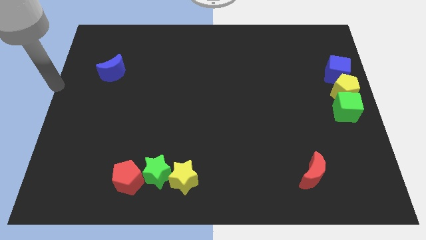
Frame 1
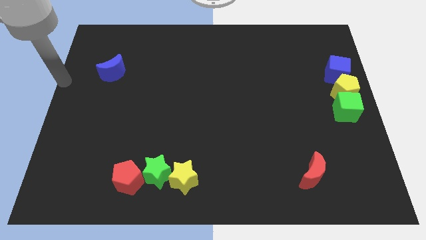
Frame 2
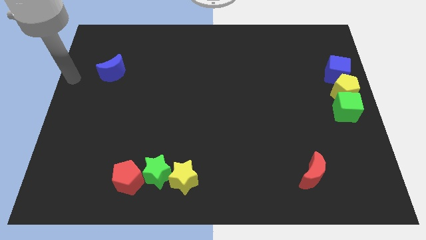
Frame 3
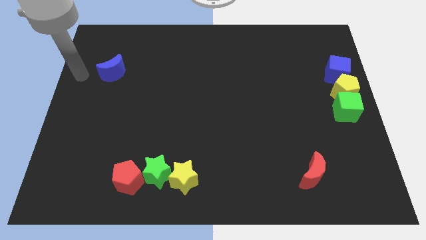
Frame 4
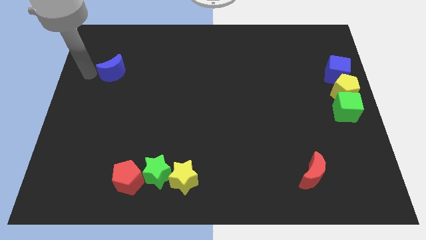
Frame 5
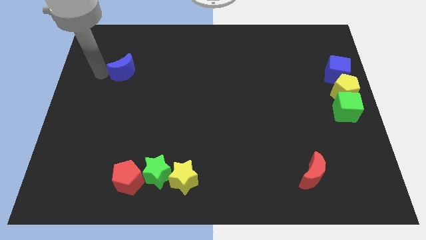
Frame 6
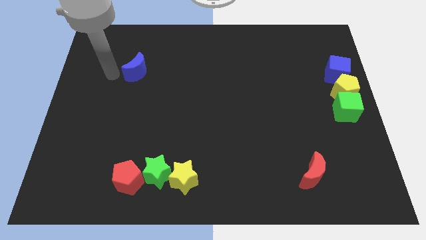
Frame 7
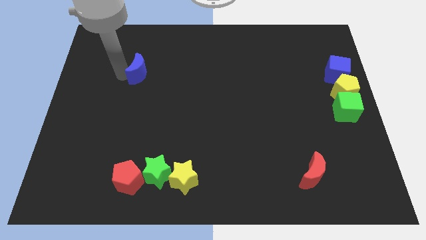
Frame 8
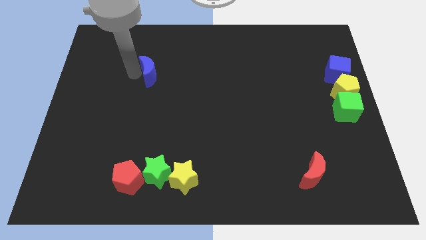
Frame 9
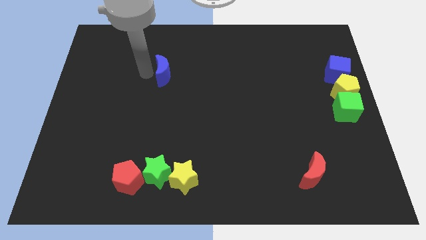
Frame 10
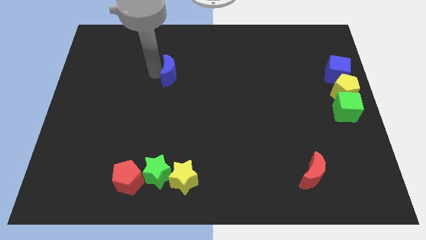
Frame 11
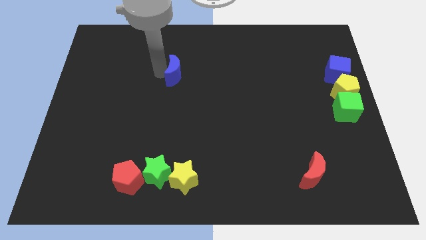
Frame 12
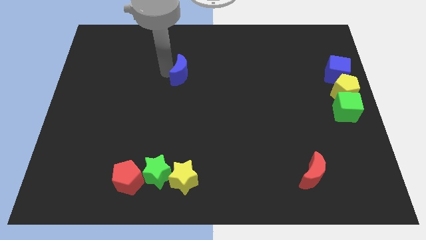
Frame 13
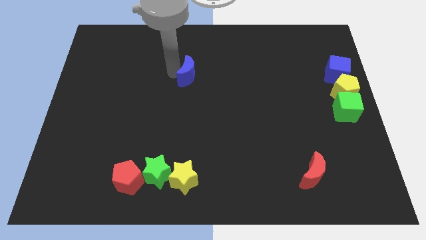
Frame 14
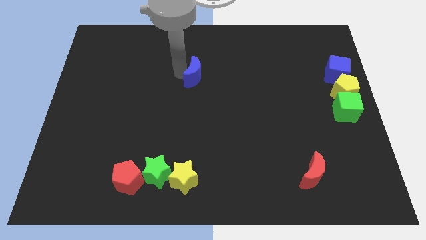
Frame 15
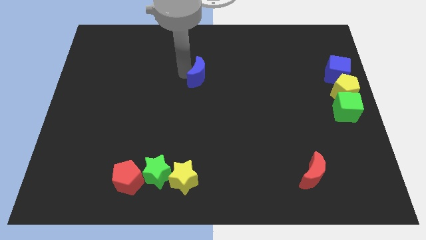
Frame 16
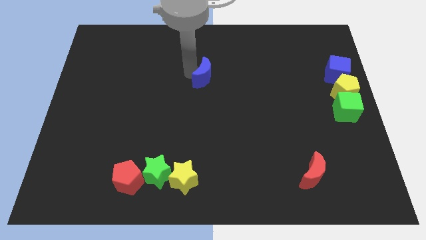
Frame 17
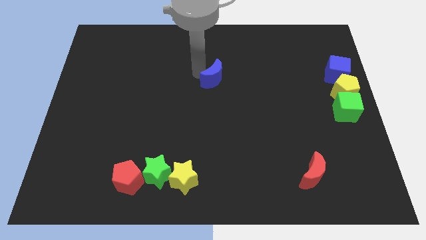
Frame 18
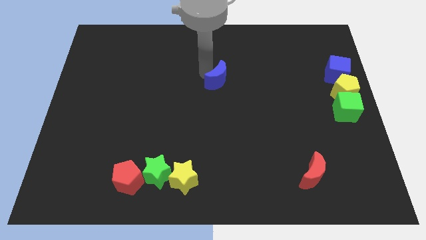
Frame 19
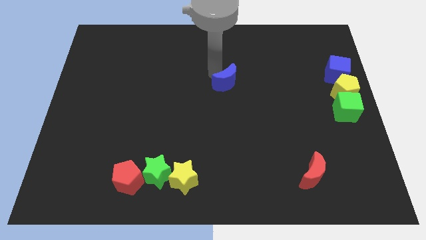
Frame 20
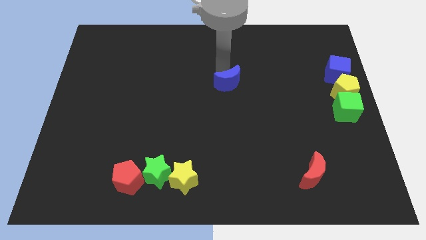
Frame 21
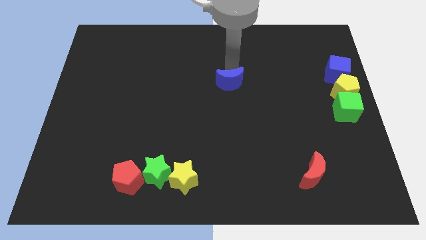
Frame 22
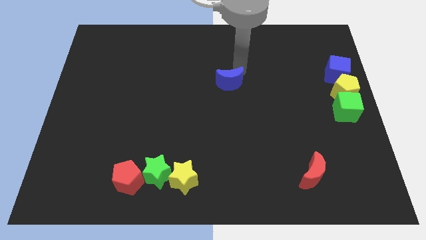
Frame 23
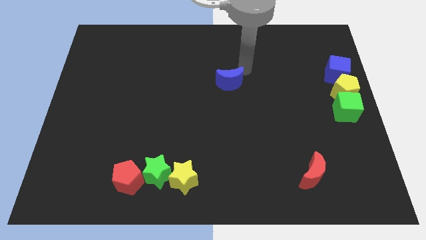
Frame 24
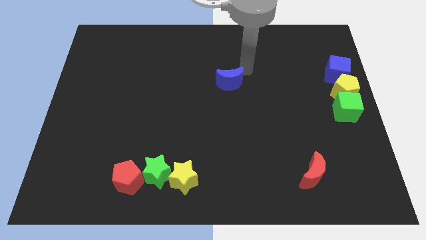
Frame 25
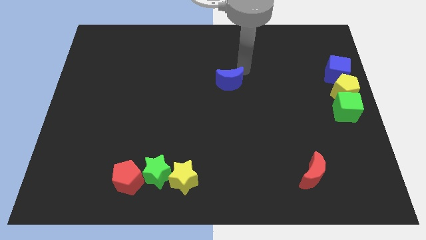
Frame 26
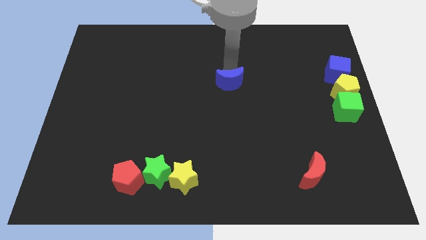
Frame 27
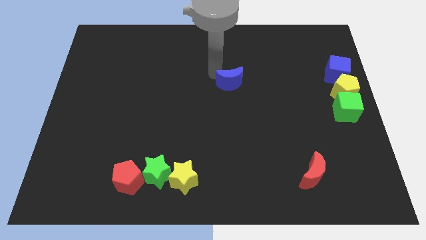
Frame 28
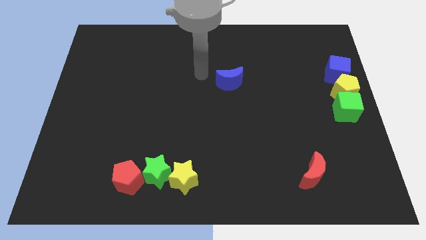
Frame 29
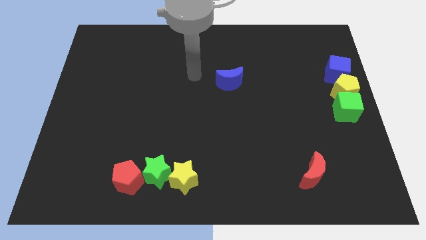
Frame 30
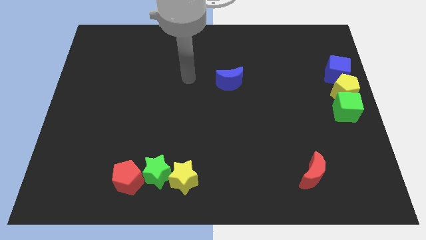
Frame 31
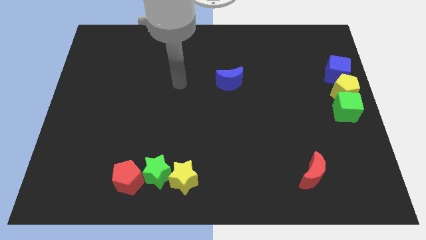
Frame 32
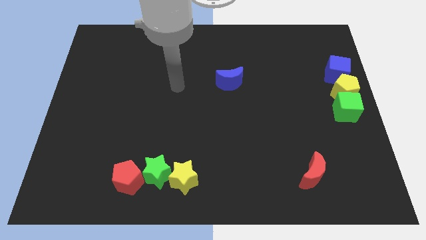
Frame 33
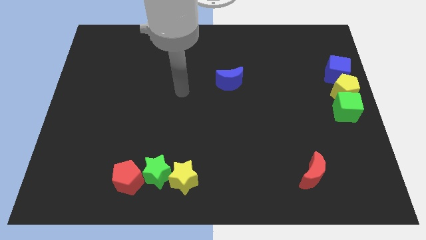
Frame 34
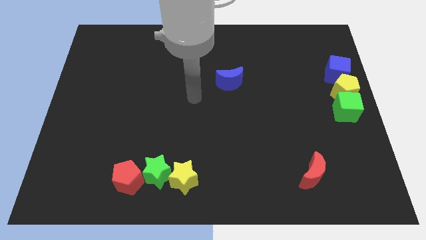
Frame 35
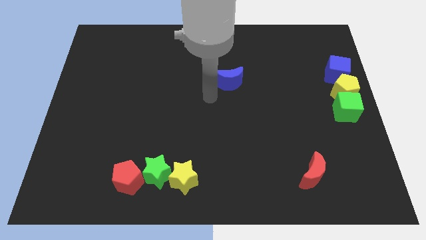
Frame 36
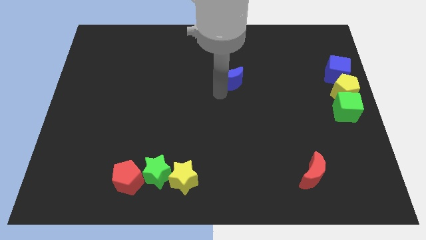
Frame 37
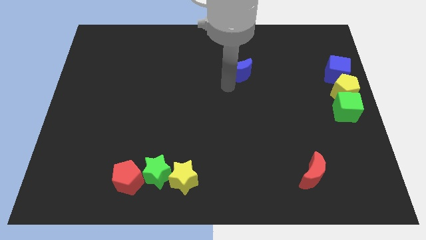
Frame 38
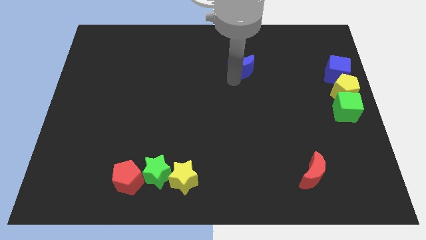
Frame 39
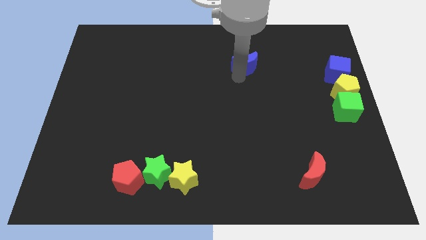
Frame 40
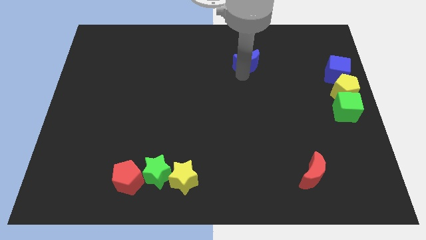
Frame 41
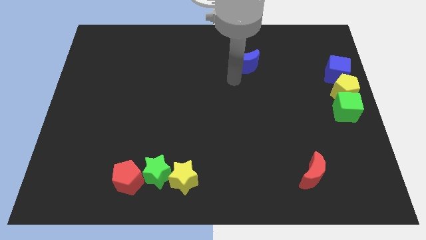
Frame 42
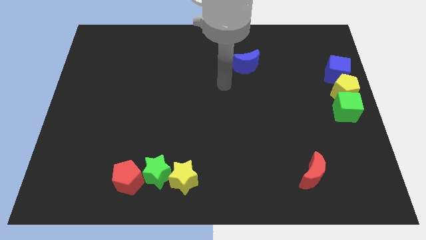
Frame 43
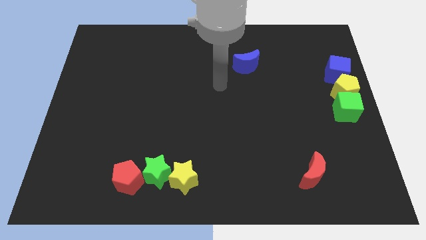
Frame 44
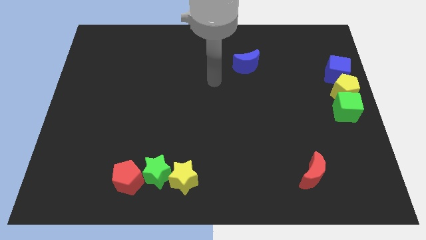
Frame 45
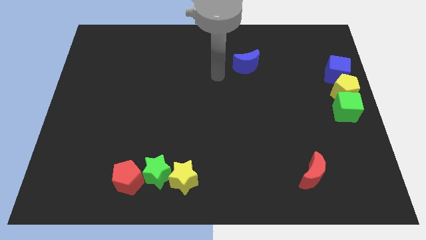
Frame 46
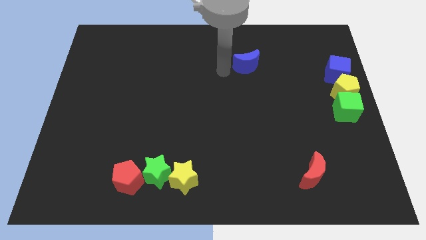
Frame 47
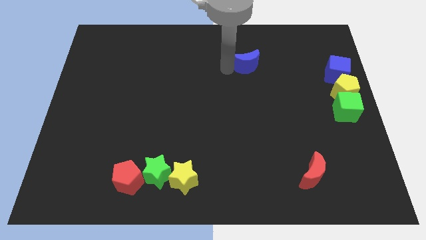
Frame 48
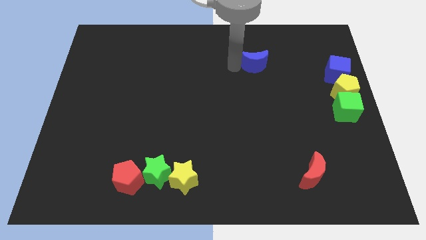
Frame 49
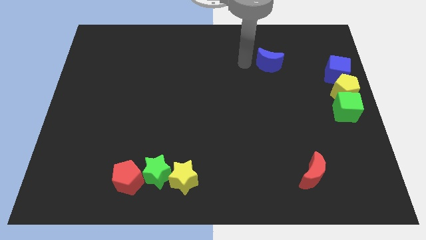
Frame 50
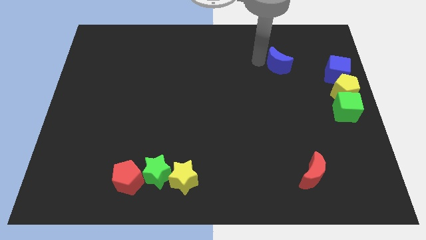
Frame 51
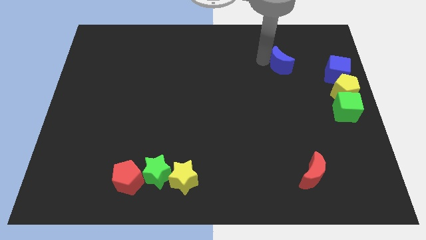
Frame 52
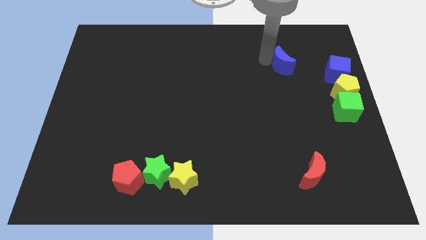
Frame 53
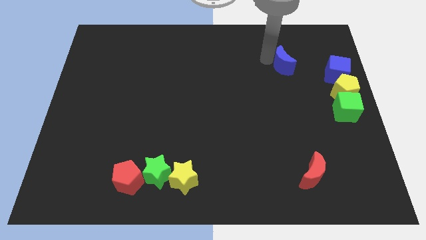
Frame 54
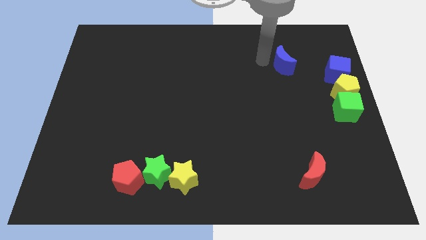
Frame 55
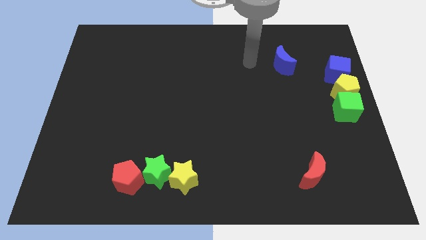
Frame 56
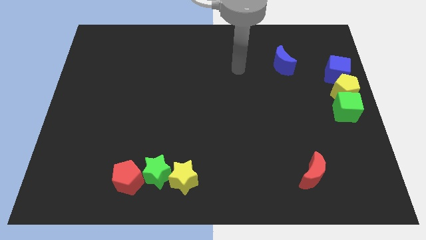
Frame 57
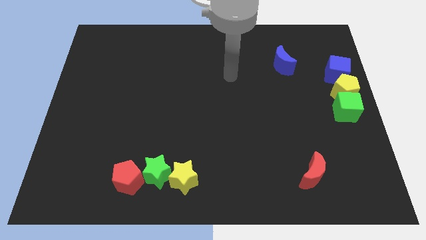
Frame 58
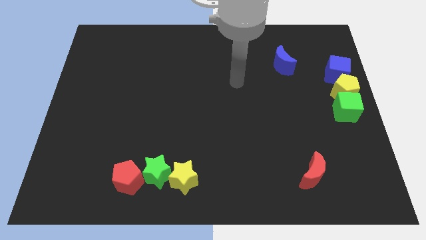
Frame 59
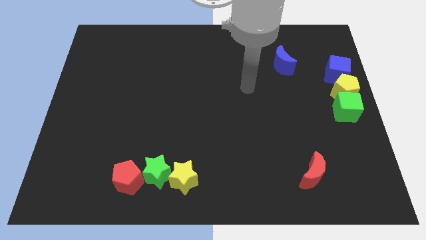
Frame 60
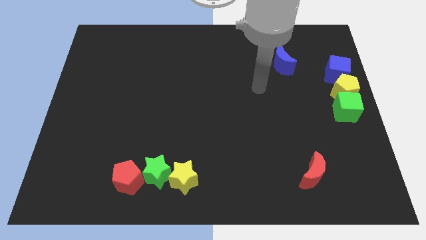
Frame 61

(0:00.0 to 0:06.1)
push blue moon towards blue cube

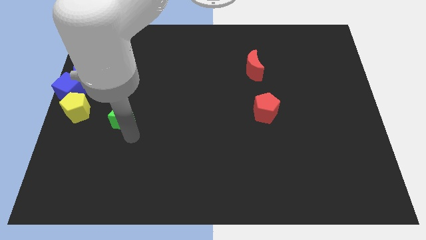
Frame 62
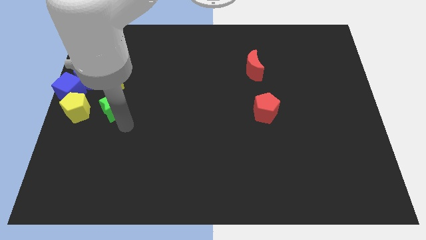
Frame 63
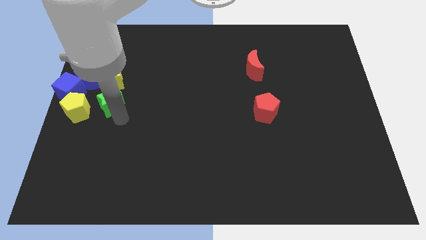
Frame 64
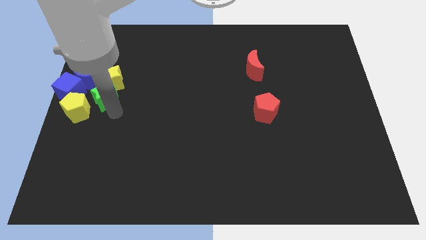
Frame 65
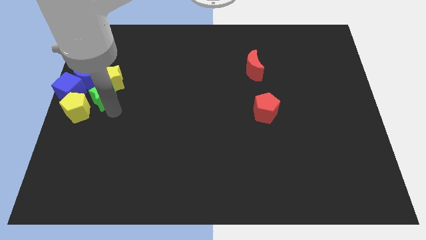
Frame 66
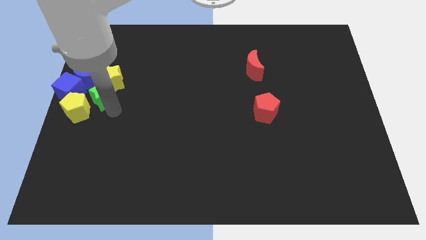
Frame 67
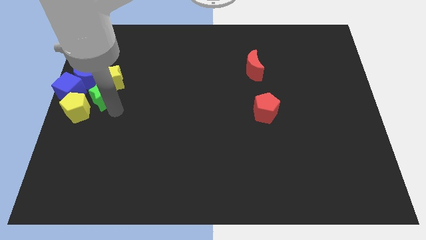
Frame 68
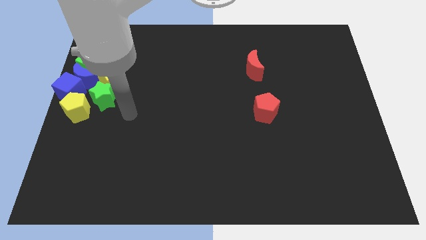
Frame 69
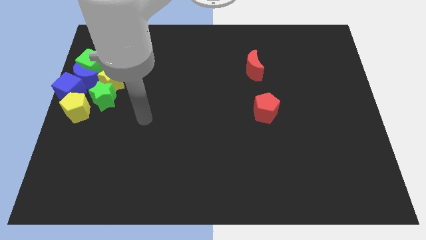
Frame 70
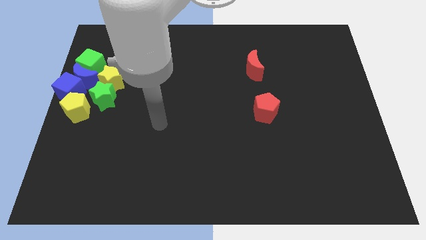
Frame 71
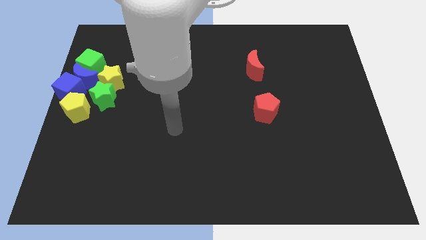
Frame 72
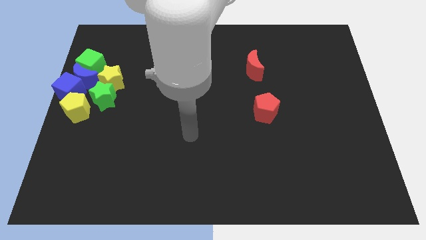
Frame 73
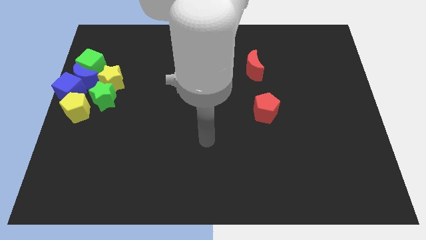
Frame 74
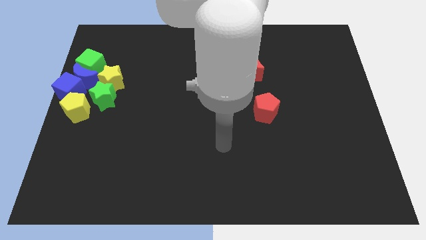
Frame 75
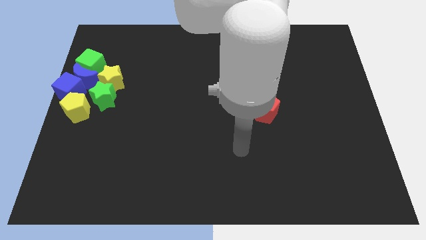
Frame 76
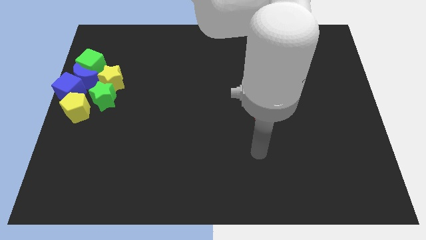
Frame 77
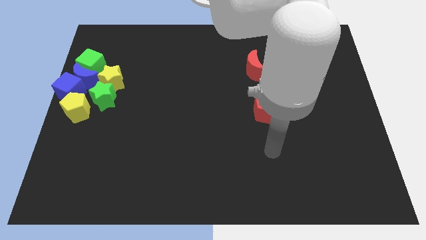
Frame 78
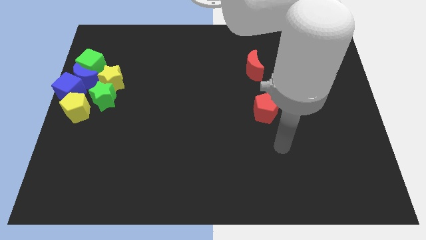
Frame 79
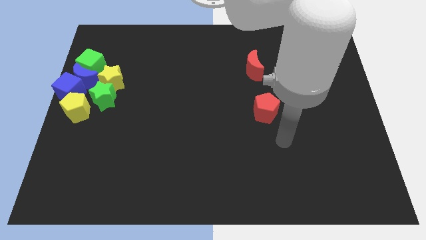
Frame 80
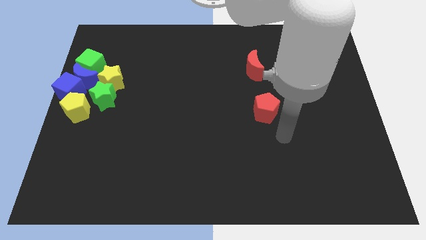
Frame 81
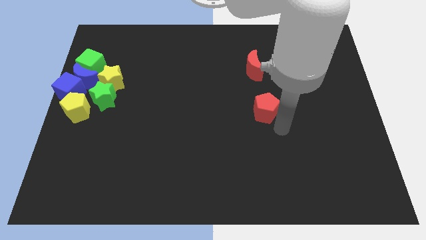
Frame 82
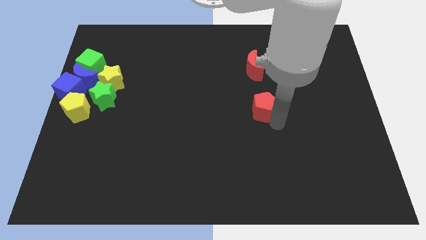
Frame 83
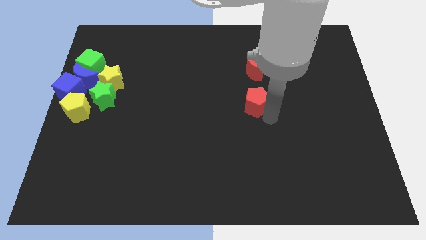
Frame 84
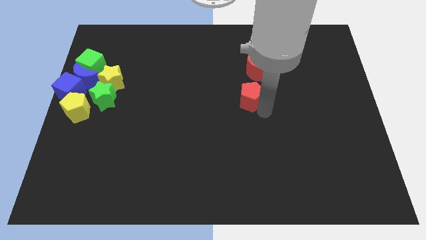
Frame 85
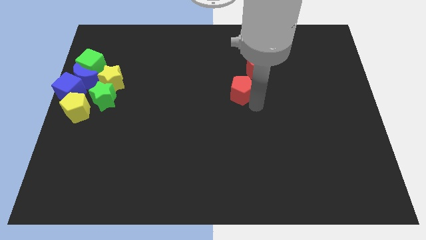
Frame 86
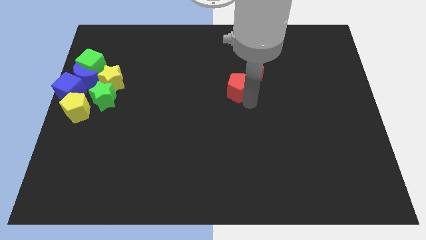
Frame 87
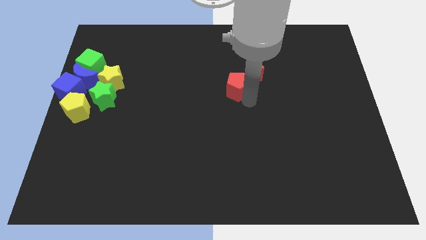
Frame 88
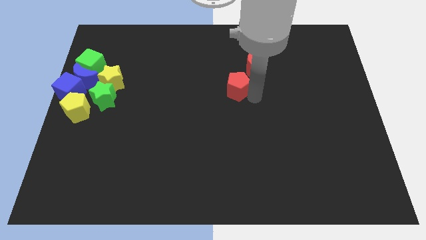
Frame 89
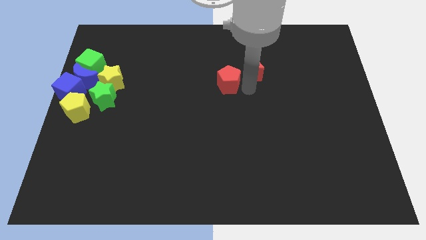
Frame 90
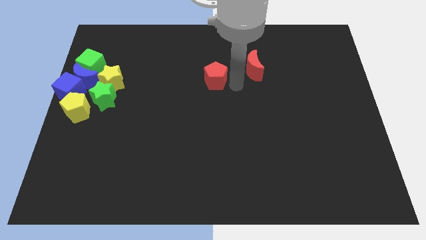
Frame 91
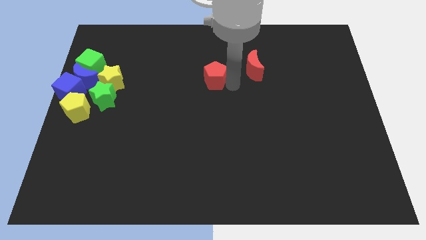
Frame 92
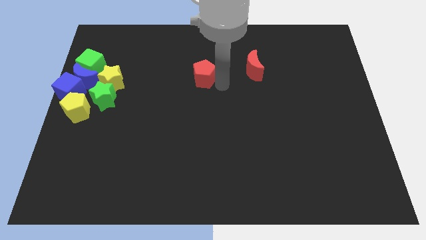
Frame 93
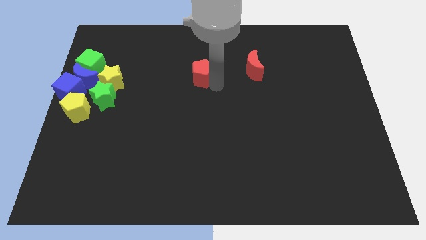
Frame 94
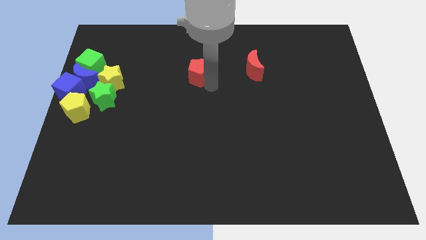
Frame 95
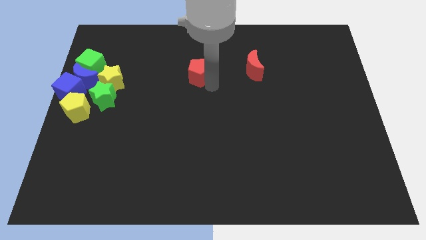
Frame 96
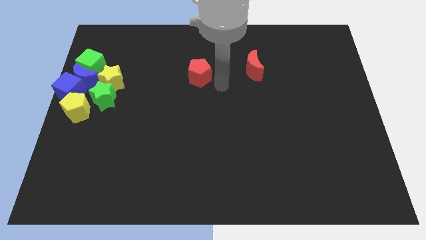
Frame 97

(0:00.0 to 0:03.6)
push the red pentagon left to the red moon
